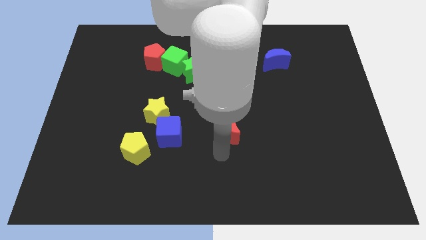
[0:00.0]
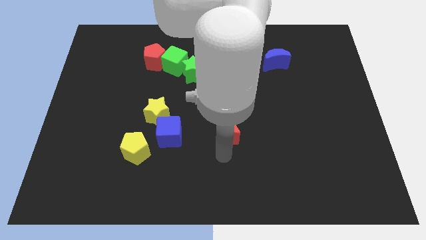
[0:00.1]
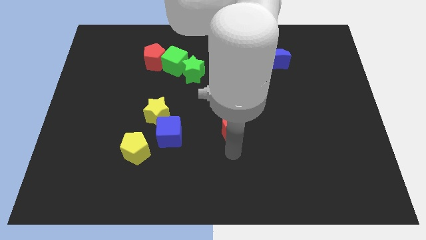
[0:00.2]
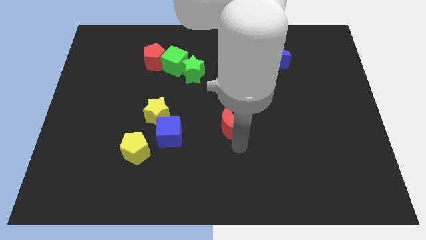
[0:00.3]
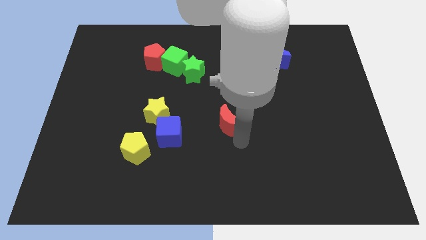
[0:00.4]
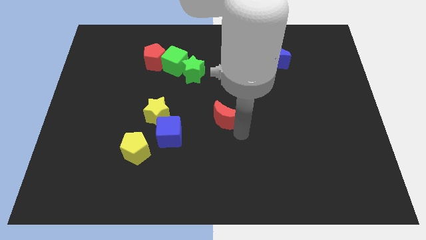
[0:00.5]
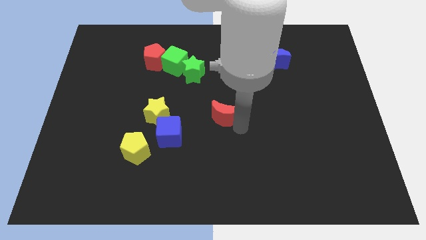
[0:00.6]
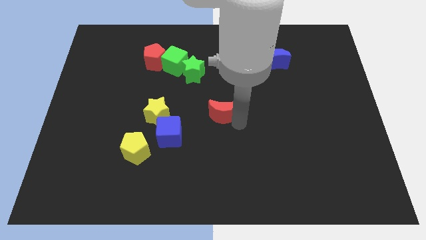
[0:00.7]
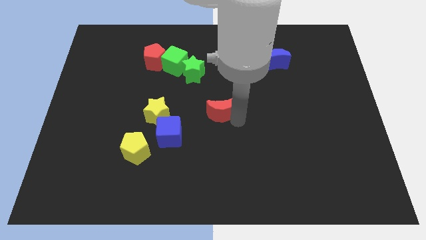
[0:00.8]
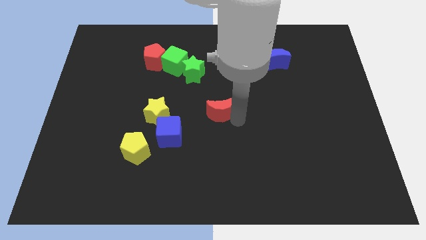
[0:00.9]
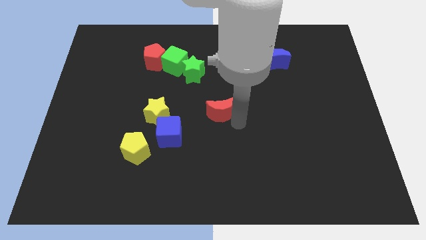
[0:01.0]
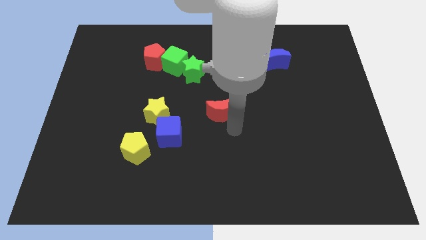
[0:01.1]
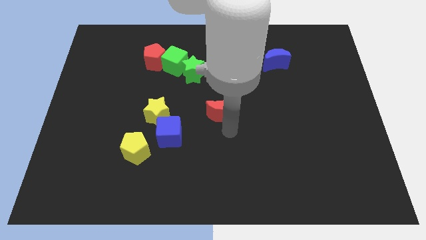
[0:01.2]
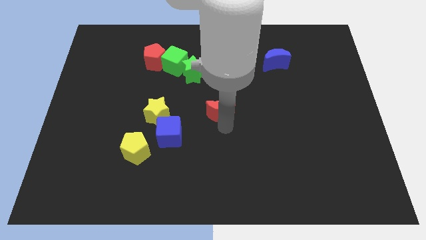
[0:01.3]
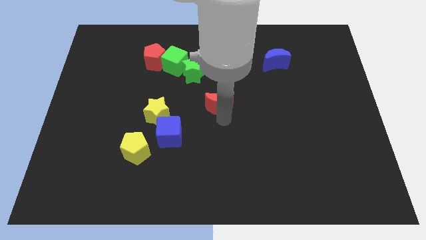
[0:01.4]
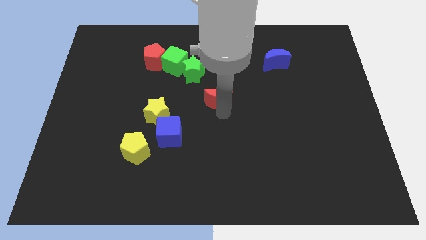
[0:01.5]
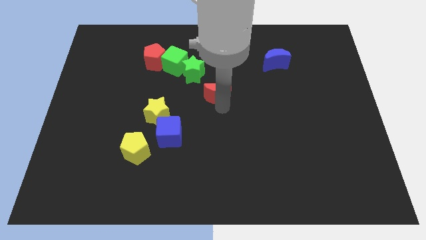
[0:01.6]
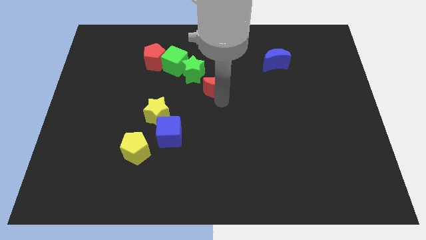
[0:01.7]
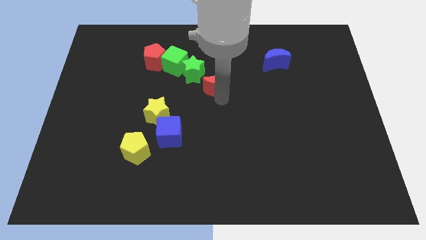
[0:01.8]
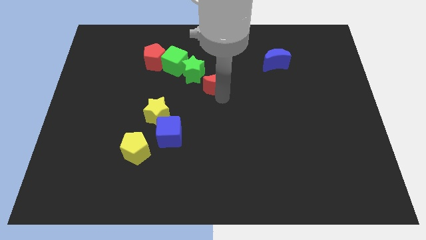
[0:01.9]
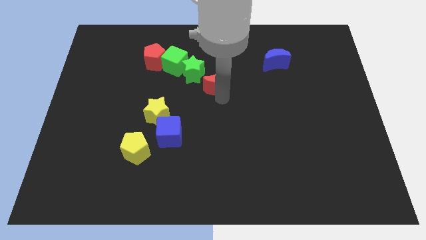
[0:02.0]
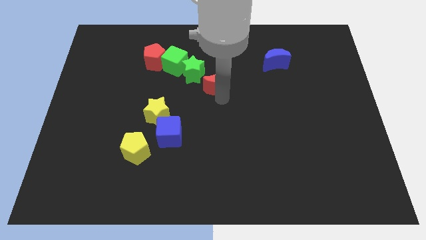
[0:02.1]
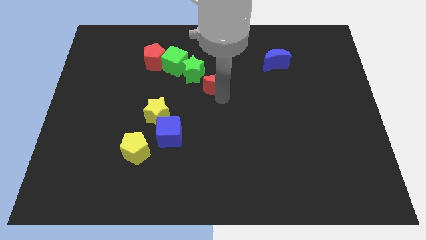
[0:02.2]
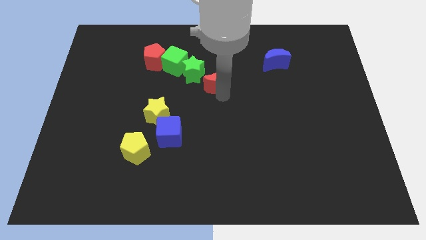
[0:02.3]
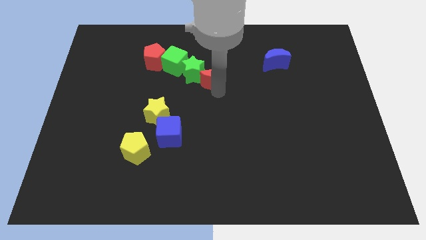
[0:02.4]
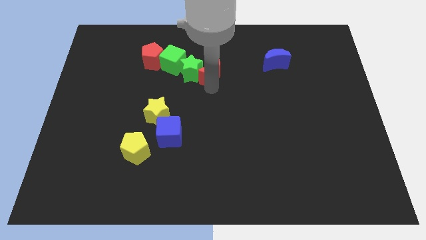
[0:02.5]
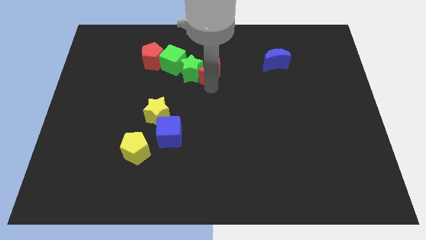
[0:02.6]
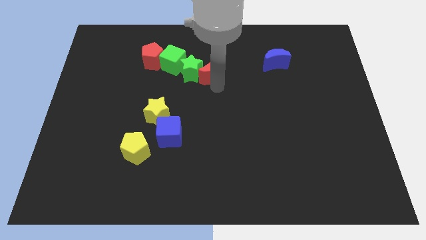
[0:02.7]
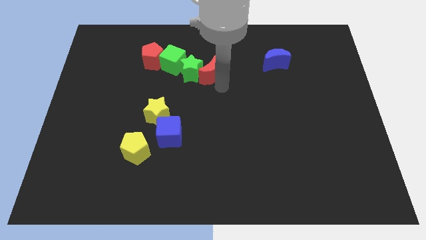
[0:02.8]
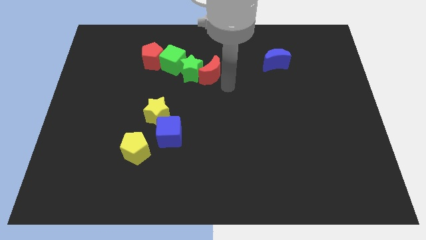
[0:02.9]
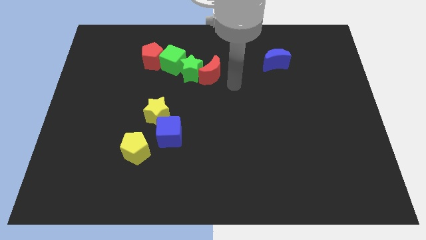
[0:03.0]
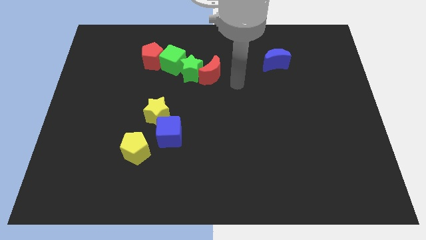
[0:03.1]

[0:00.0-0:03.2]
put the red crescent on the right side of the green star

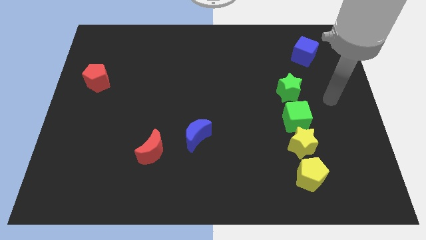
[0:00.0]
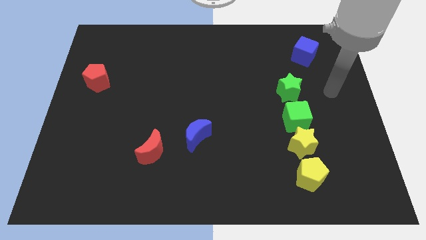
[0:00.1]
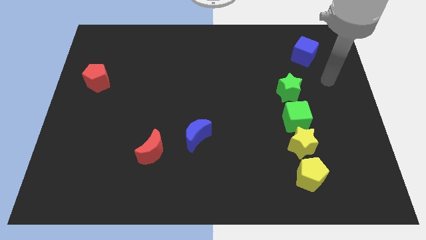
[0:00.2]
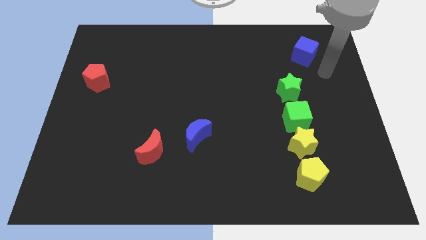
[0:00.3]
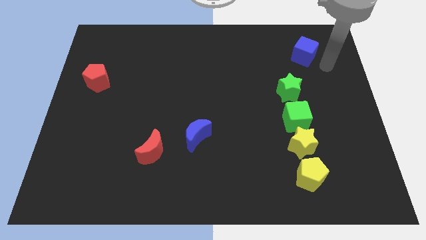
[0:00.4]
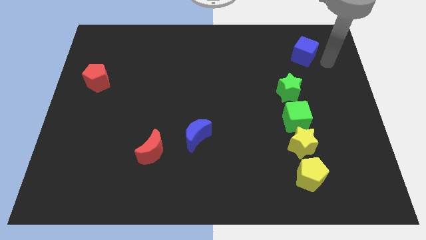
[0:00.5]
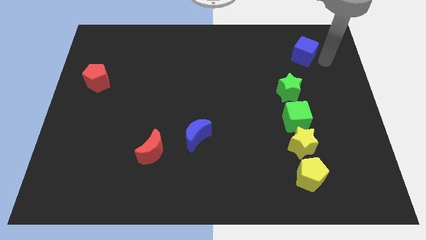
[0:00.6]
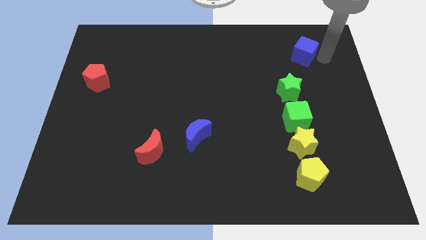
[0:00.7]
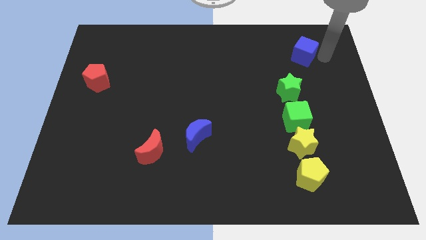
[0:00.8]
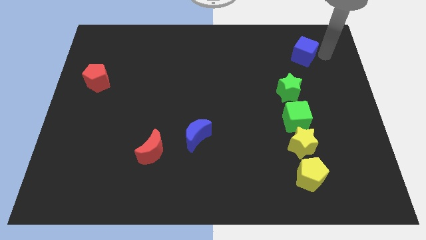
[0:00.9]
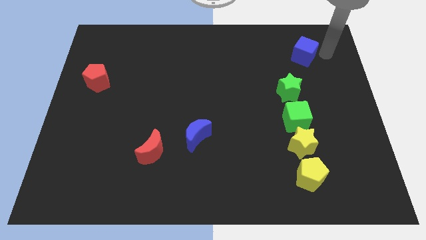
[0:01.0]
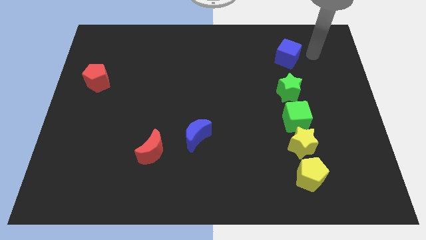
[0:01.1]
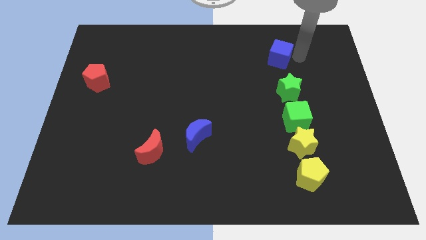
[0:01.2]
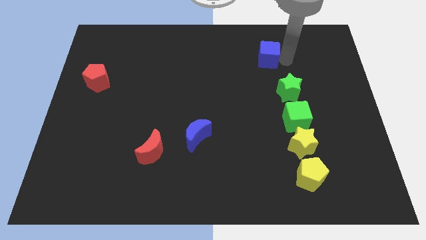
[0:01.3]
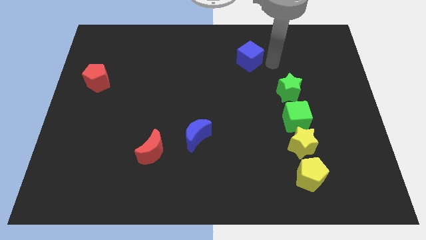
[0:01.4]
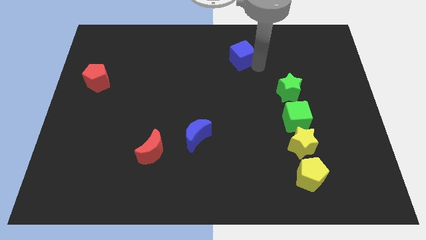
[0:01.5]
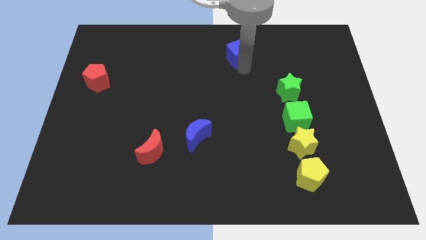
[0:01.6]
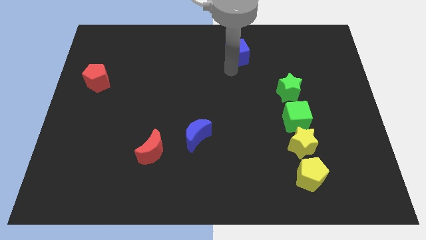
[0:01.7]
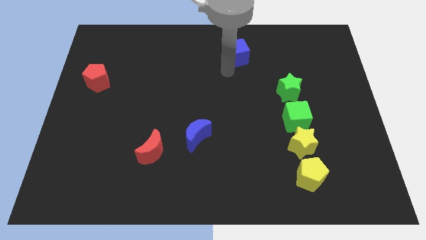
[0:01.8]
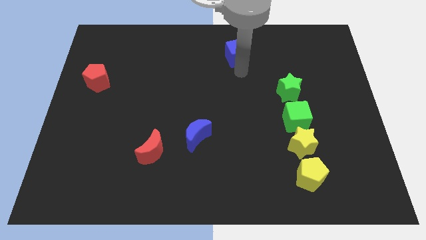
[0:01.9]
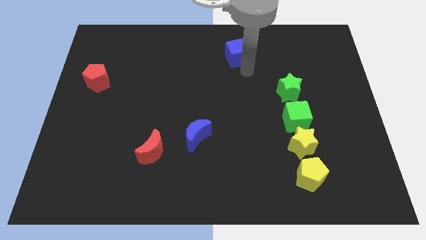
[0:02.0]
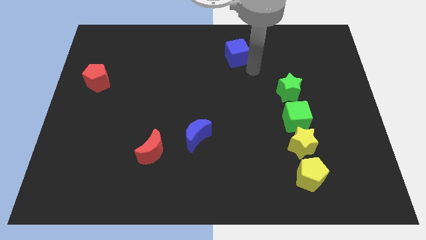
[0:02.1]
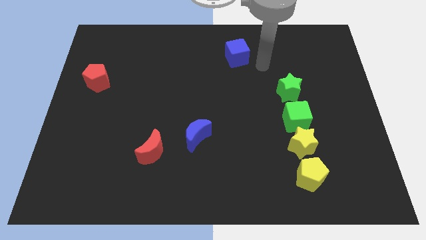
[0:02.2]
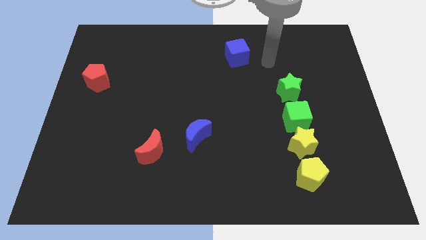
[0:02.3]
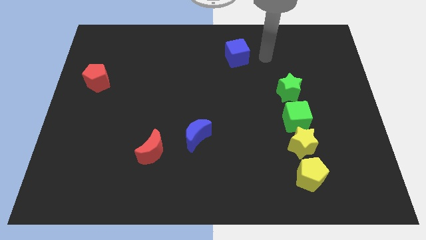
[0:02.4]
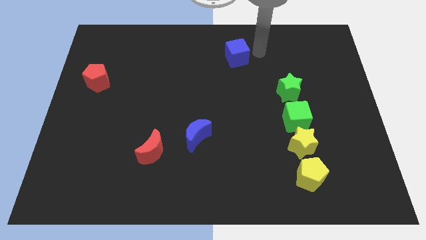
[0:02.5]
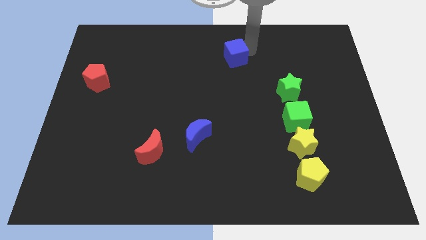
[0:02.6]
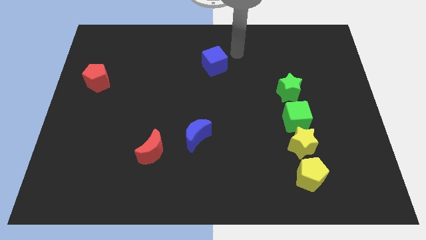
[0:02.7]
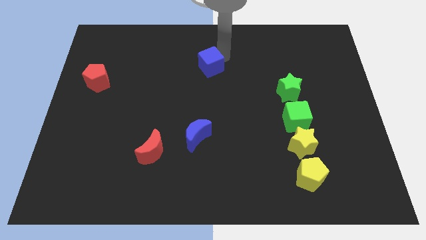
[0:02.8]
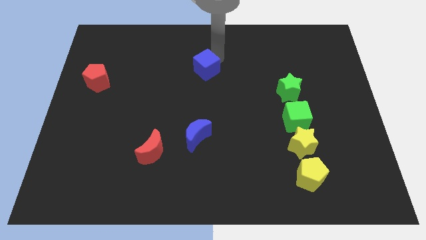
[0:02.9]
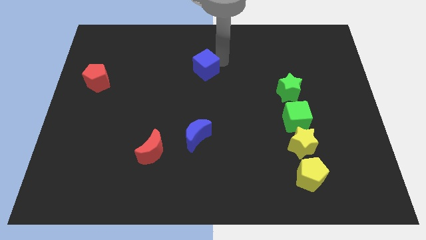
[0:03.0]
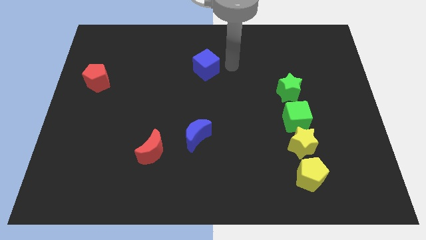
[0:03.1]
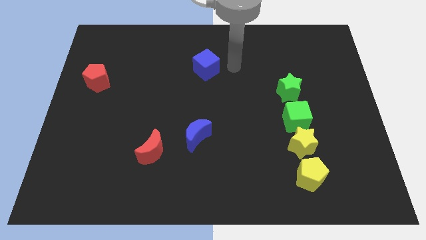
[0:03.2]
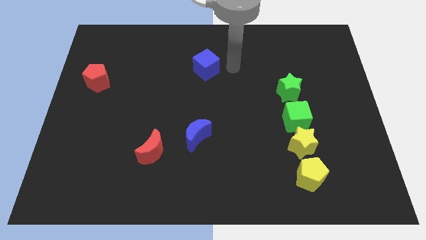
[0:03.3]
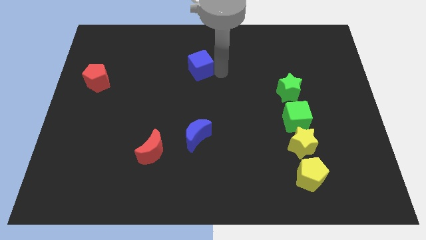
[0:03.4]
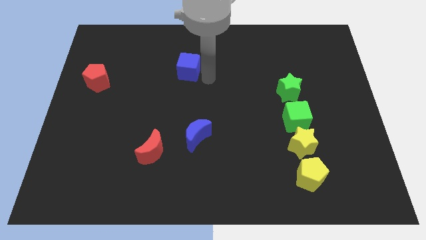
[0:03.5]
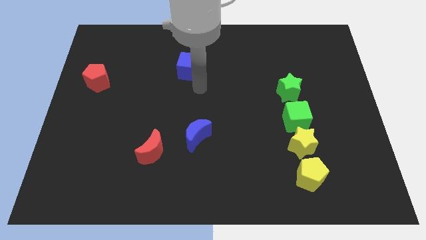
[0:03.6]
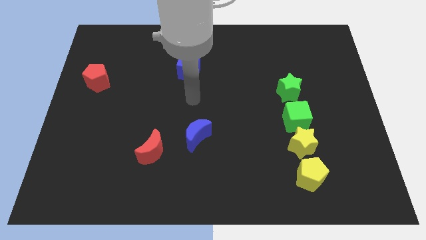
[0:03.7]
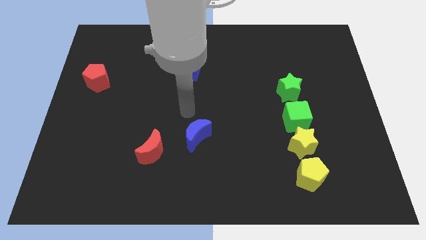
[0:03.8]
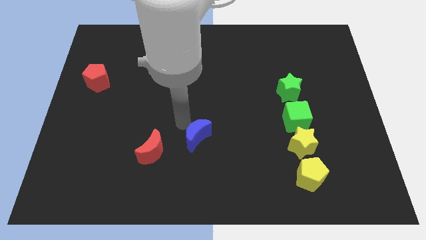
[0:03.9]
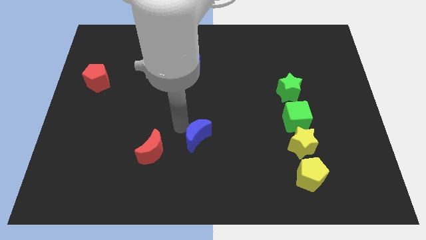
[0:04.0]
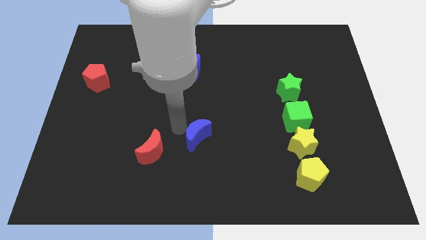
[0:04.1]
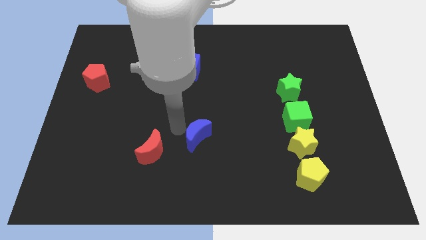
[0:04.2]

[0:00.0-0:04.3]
push the blue cube to the left side of the board

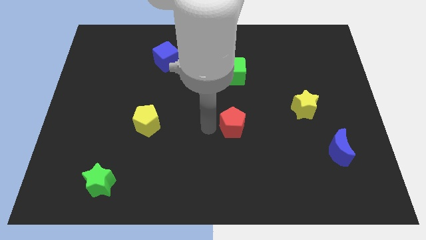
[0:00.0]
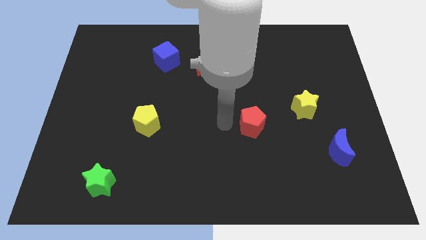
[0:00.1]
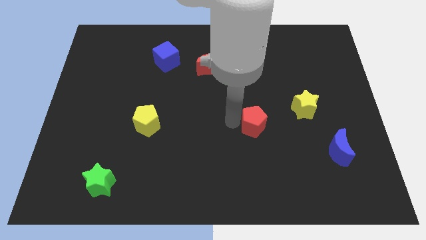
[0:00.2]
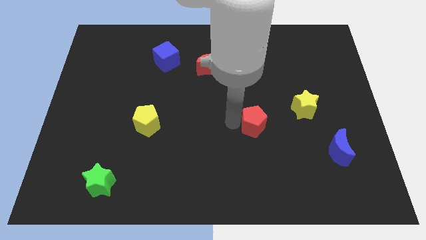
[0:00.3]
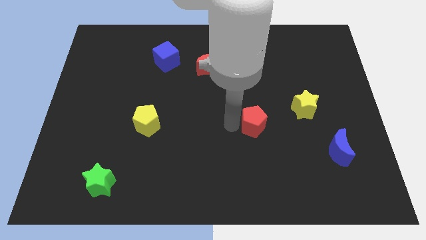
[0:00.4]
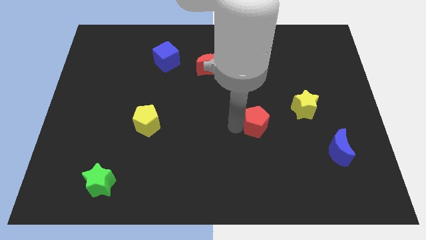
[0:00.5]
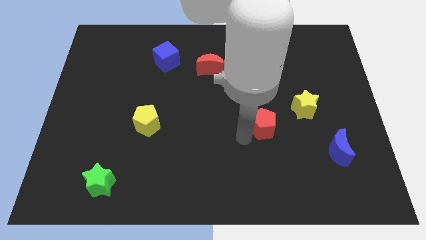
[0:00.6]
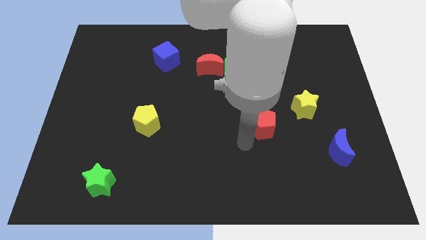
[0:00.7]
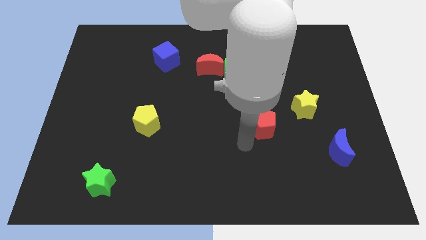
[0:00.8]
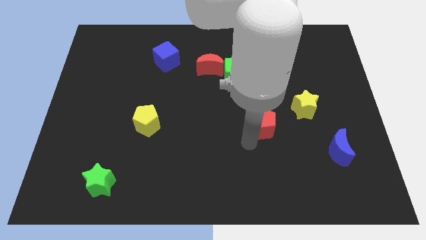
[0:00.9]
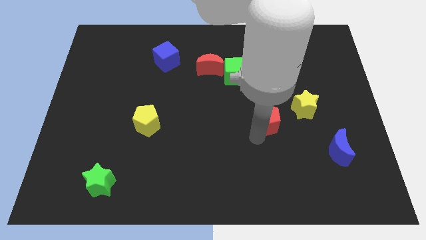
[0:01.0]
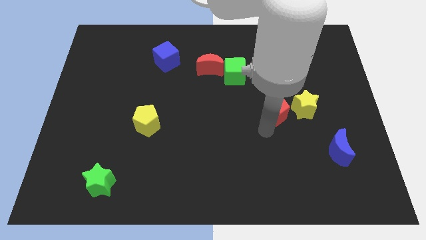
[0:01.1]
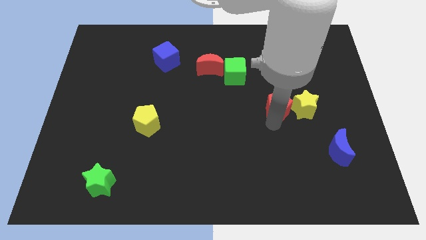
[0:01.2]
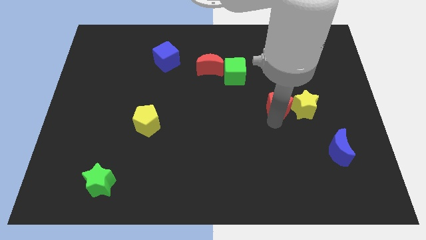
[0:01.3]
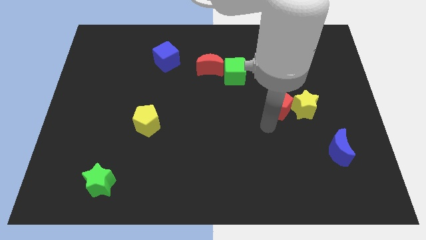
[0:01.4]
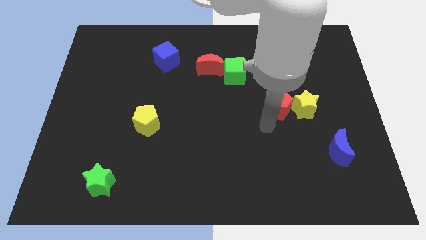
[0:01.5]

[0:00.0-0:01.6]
move red pentagon left beside the yellow star
